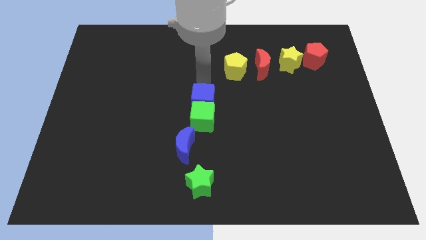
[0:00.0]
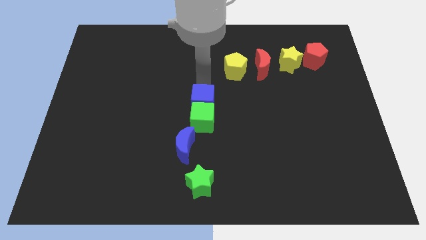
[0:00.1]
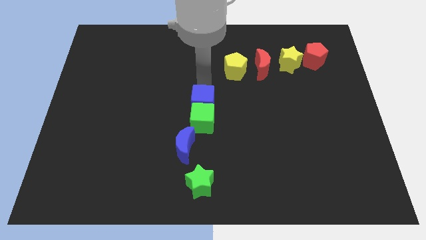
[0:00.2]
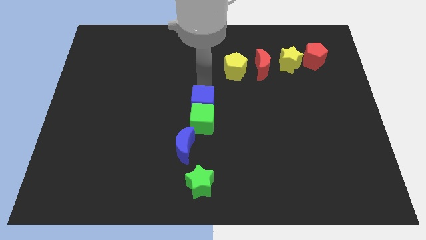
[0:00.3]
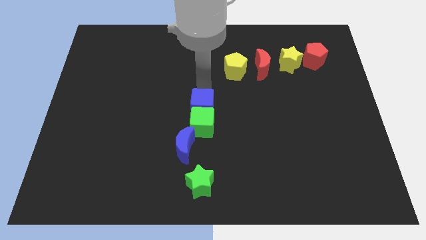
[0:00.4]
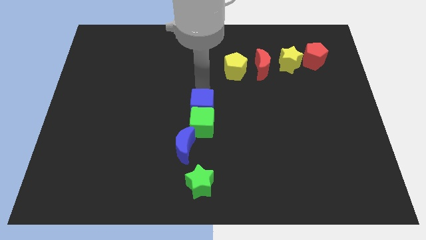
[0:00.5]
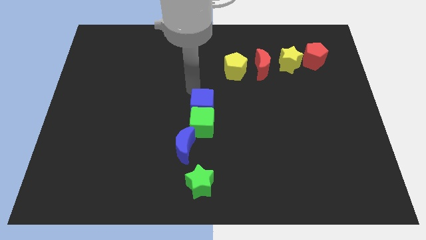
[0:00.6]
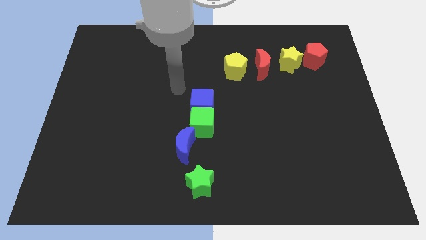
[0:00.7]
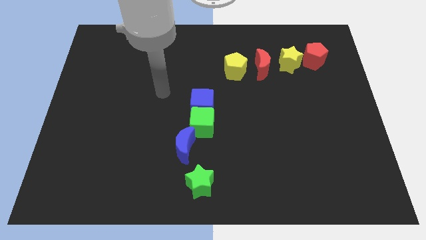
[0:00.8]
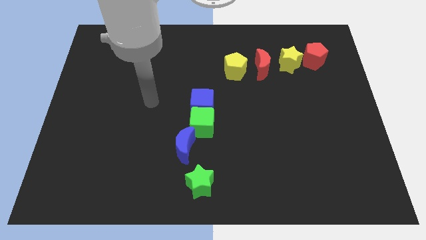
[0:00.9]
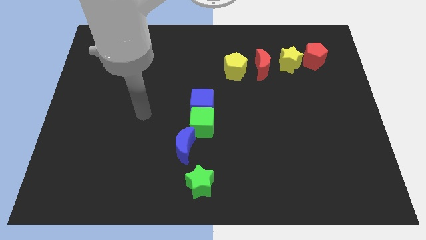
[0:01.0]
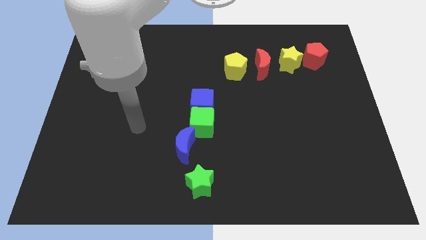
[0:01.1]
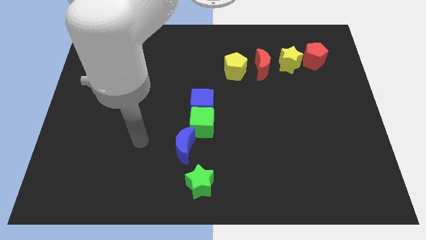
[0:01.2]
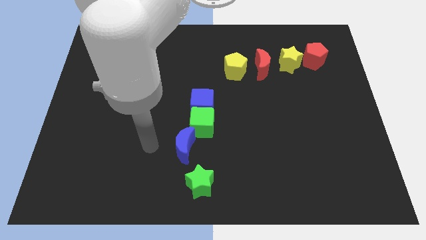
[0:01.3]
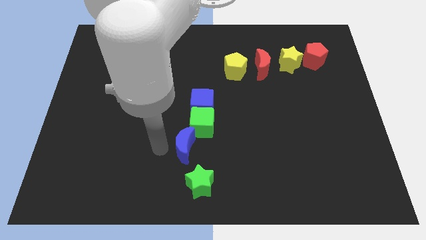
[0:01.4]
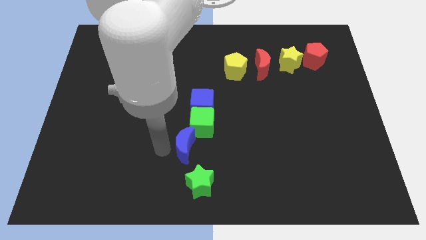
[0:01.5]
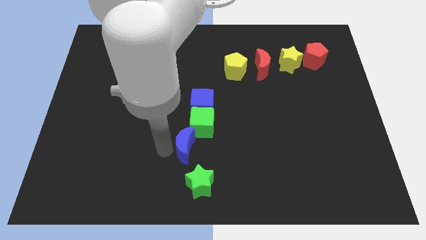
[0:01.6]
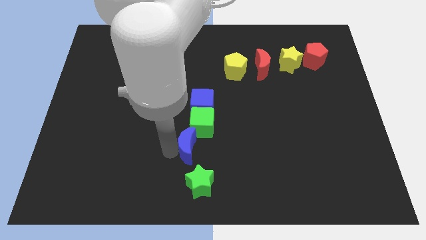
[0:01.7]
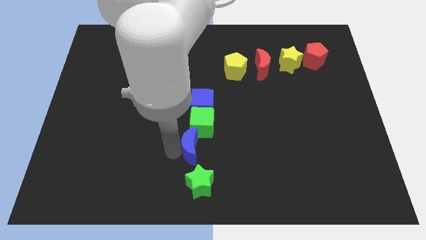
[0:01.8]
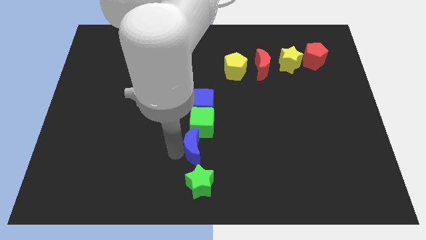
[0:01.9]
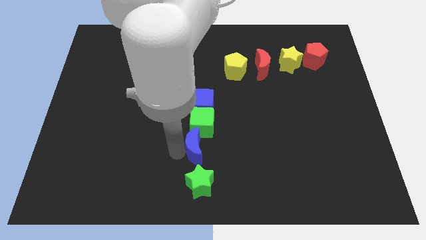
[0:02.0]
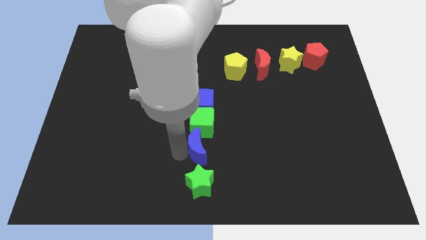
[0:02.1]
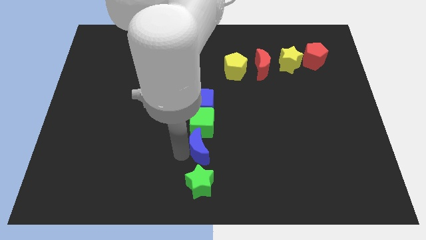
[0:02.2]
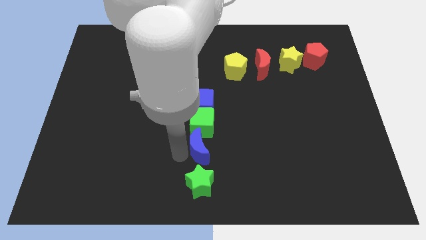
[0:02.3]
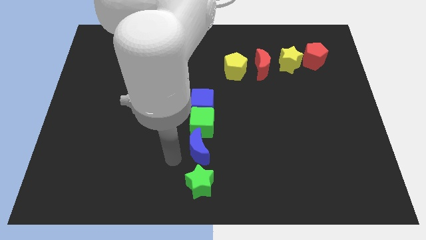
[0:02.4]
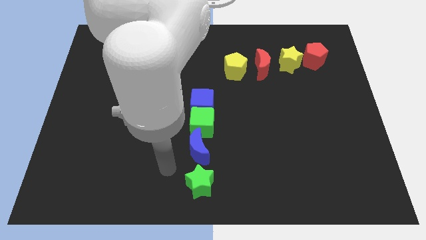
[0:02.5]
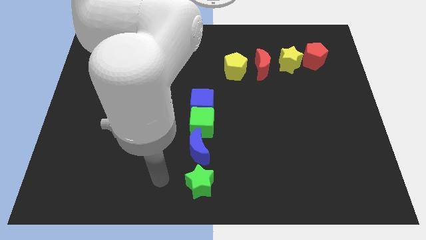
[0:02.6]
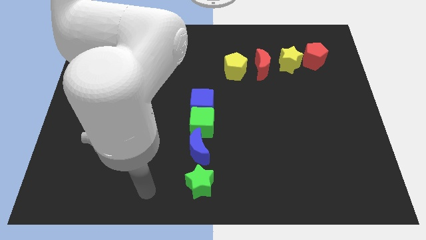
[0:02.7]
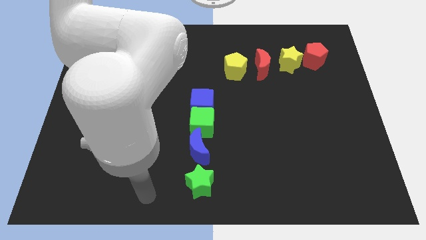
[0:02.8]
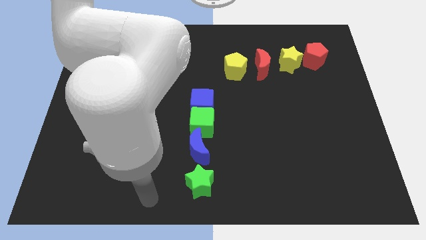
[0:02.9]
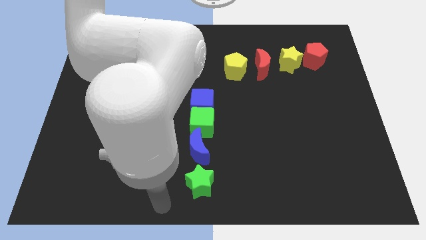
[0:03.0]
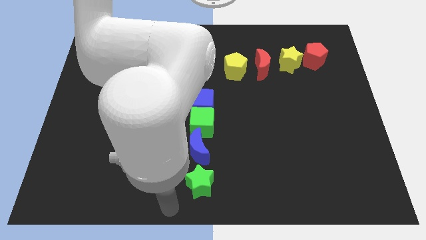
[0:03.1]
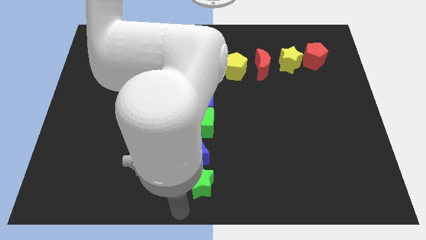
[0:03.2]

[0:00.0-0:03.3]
move the green blocks and blue blocks vertically

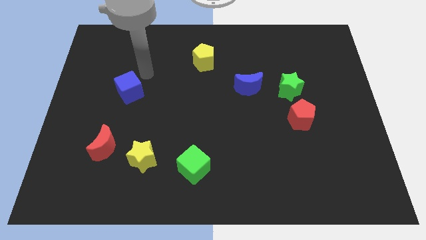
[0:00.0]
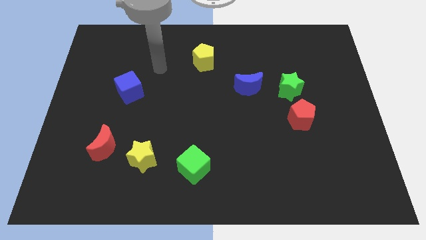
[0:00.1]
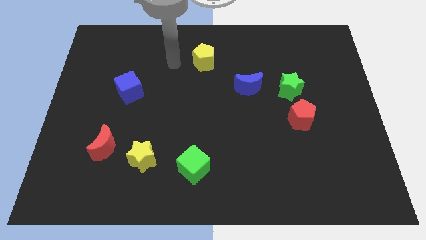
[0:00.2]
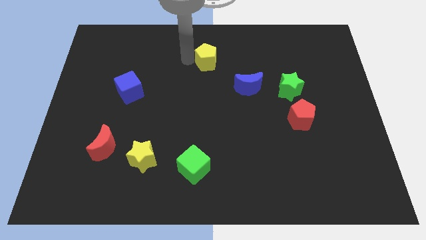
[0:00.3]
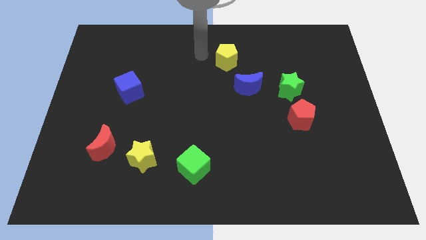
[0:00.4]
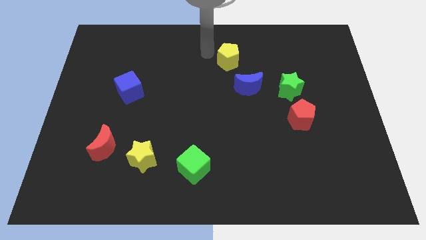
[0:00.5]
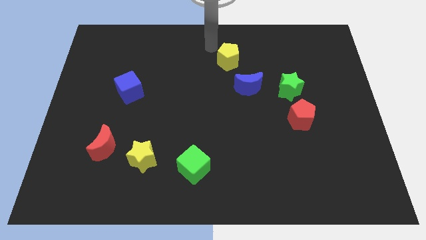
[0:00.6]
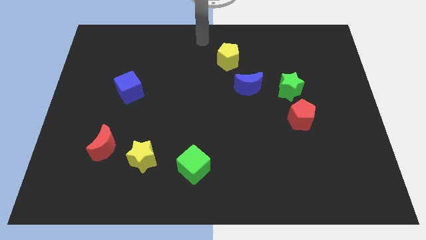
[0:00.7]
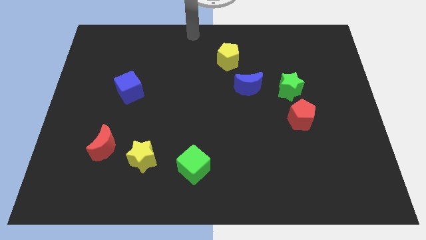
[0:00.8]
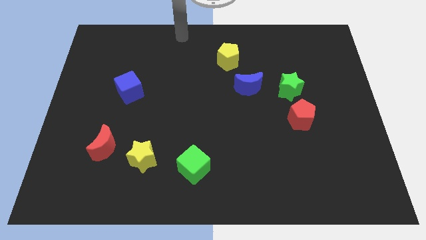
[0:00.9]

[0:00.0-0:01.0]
move the yellow pentagon to the right of the board

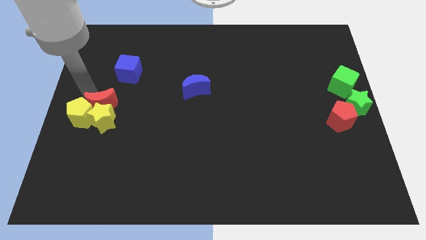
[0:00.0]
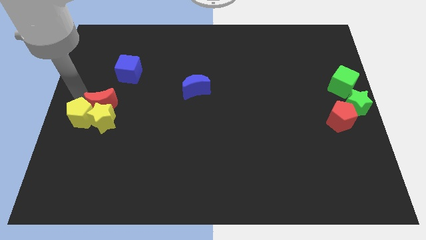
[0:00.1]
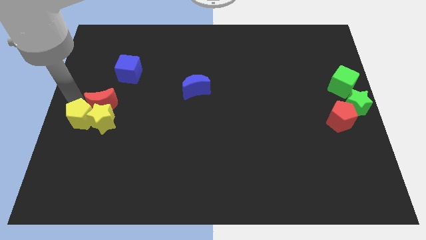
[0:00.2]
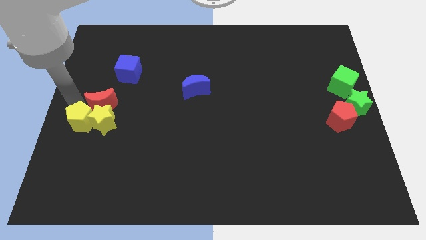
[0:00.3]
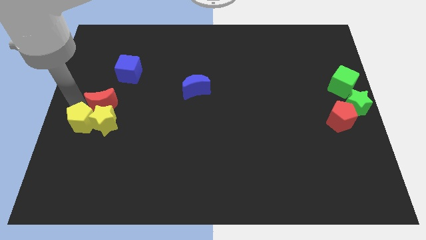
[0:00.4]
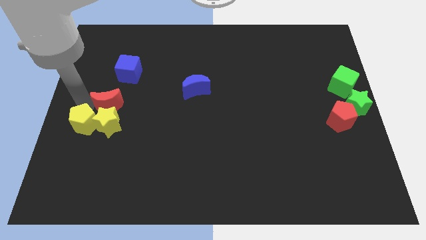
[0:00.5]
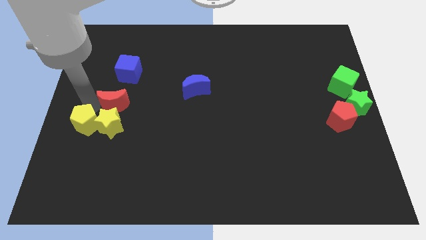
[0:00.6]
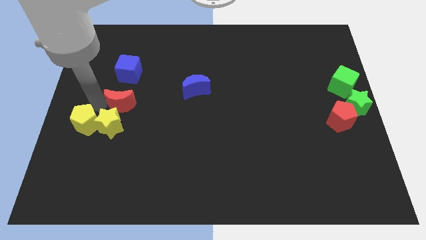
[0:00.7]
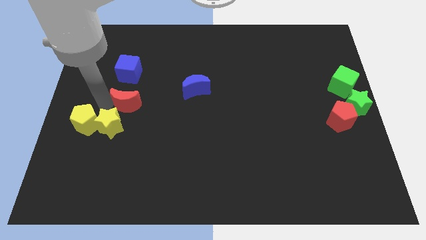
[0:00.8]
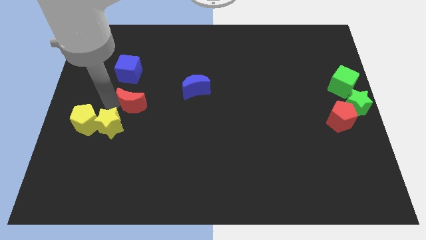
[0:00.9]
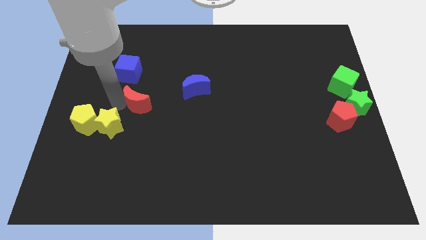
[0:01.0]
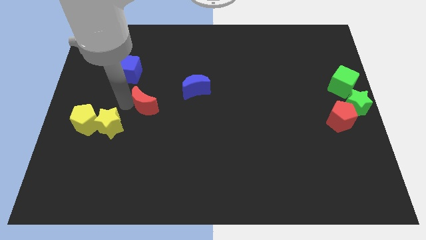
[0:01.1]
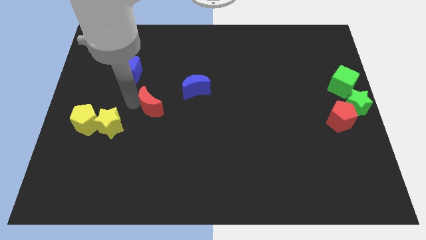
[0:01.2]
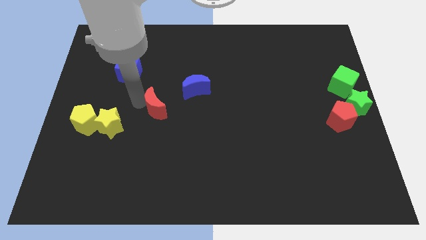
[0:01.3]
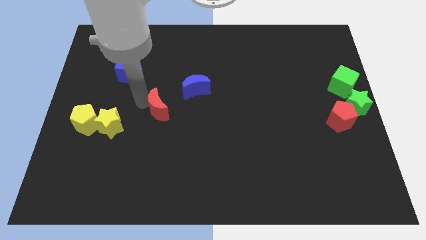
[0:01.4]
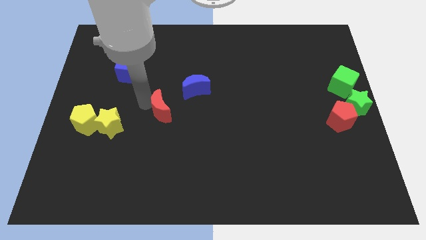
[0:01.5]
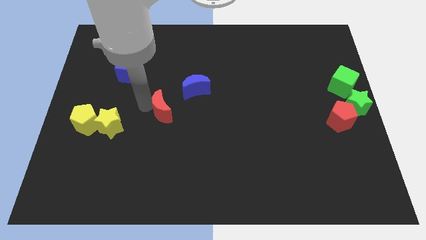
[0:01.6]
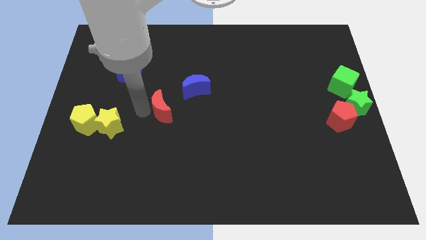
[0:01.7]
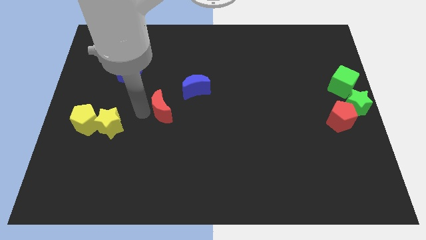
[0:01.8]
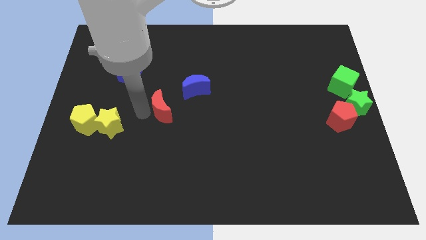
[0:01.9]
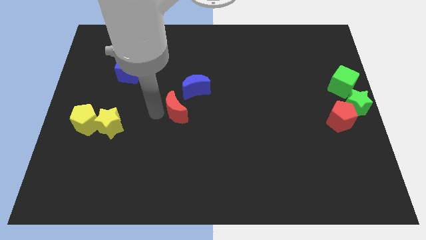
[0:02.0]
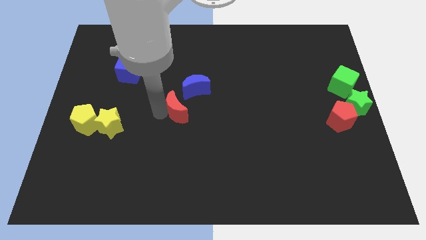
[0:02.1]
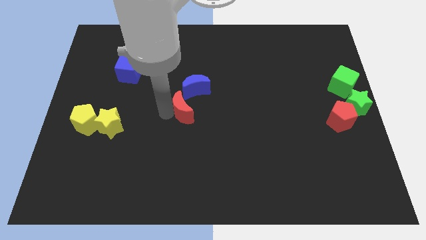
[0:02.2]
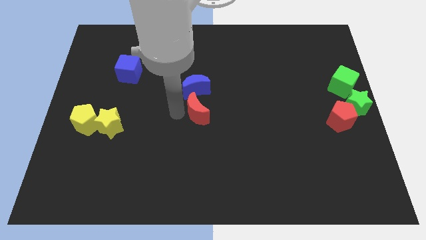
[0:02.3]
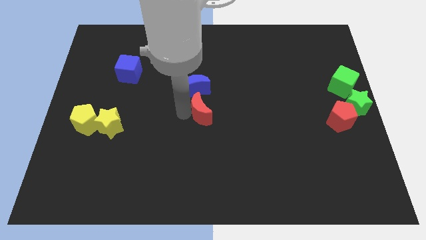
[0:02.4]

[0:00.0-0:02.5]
push red crescent below blue crescent

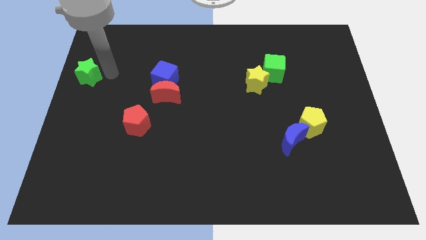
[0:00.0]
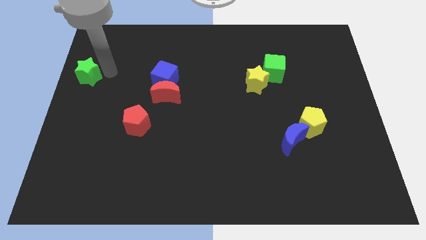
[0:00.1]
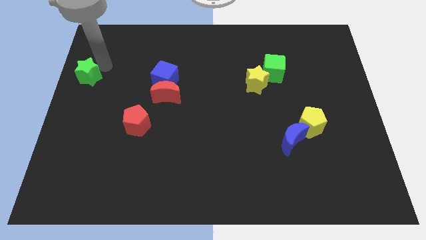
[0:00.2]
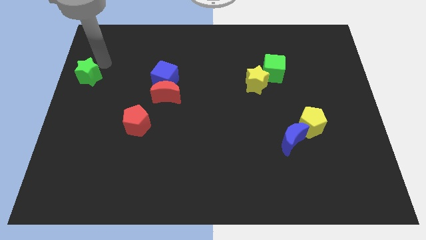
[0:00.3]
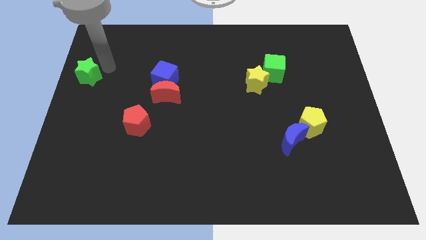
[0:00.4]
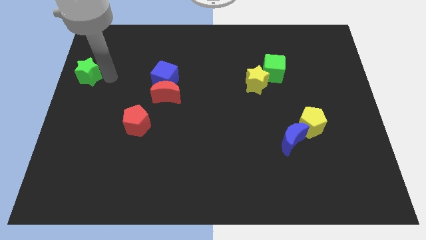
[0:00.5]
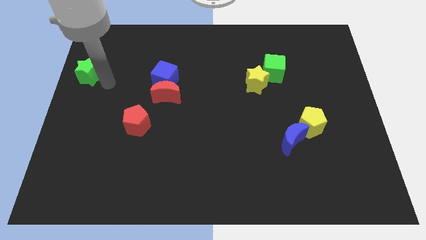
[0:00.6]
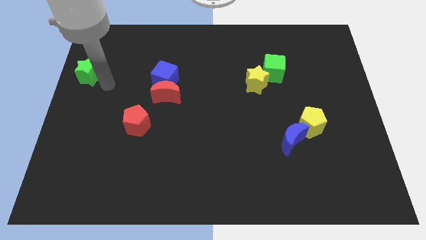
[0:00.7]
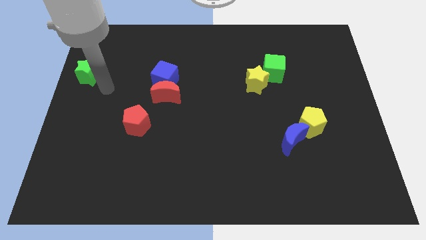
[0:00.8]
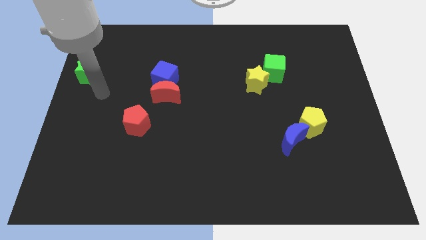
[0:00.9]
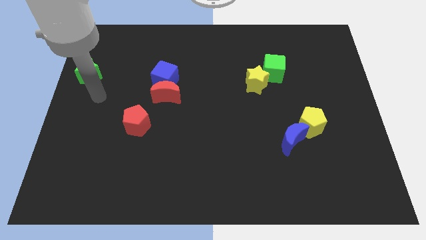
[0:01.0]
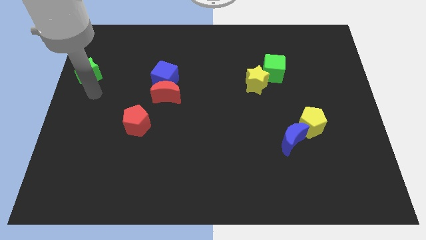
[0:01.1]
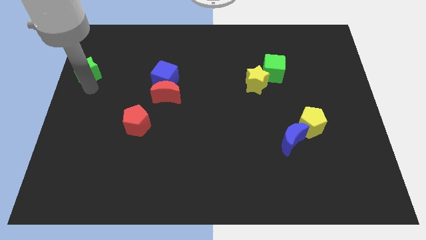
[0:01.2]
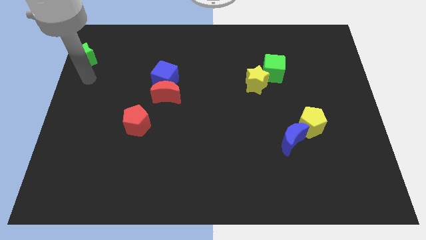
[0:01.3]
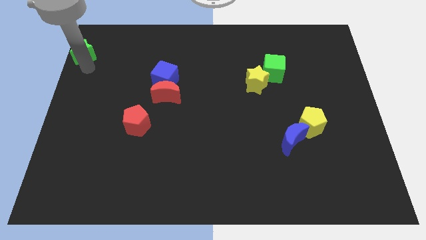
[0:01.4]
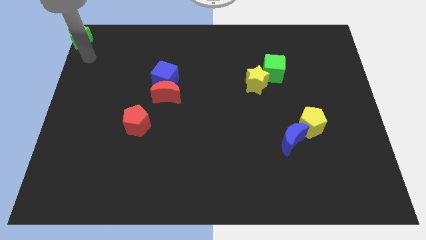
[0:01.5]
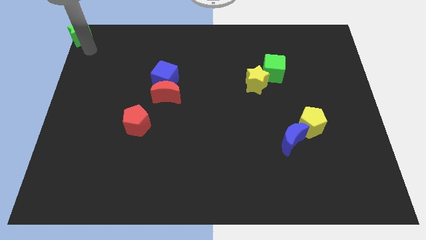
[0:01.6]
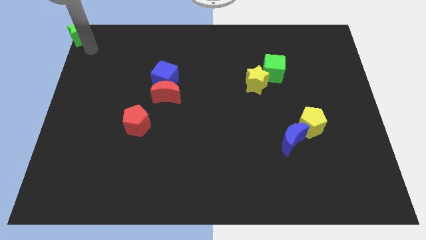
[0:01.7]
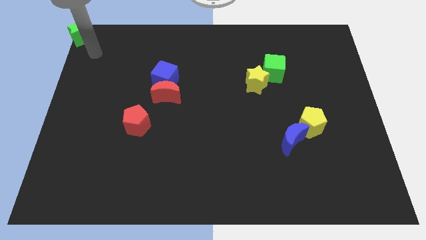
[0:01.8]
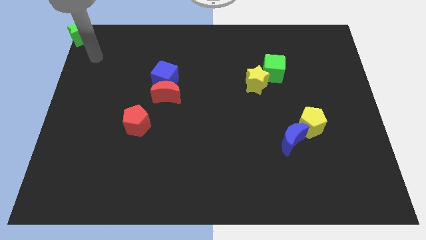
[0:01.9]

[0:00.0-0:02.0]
push the green star towards the top left corner of the board

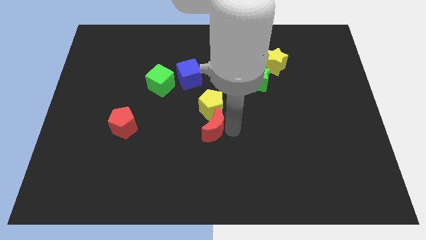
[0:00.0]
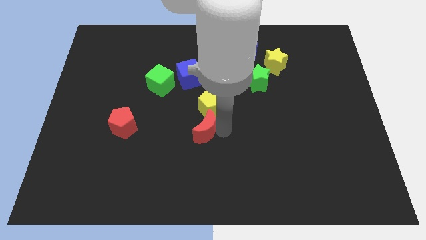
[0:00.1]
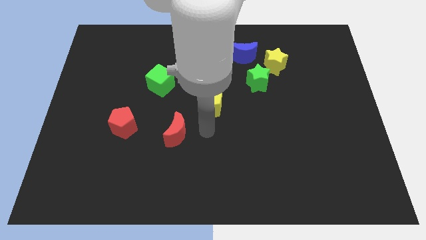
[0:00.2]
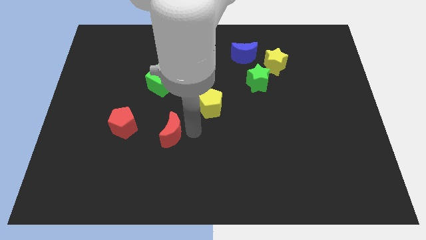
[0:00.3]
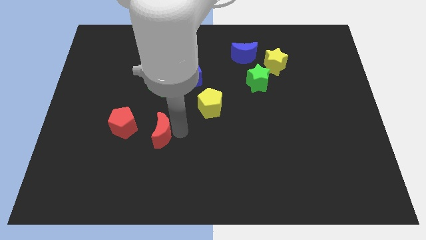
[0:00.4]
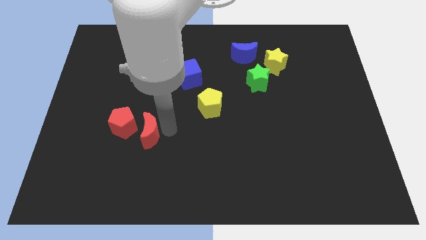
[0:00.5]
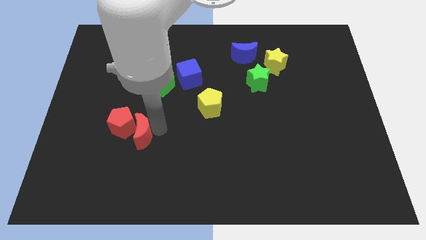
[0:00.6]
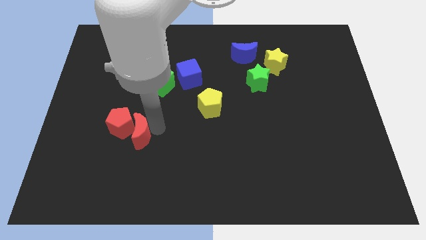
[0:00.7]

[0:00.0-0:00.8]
place red moon to the right of red pentagon
